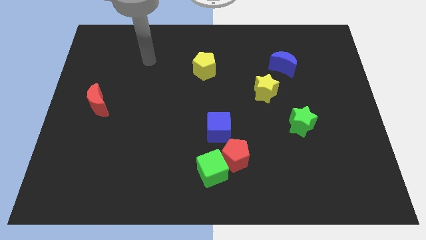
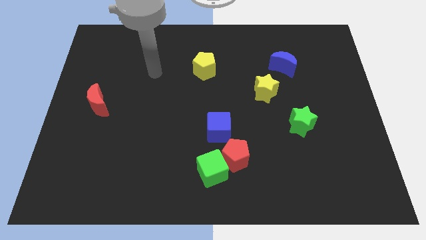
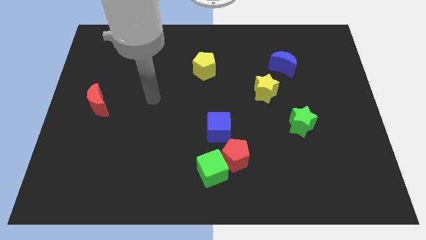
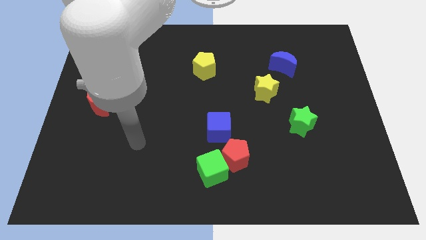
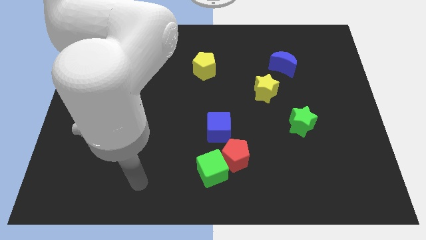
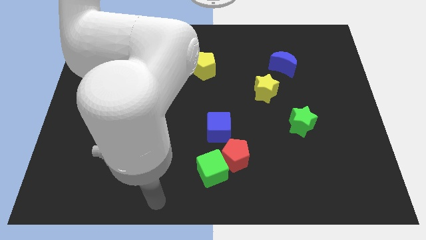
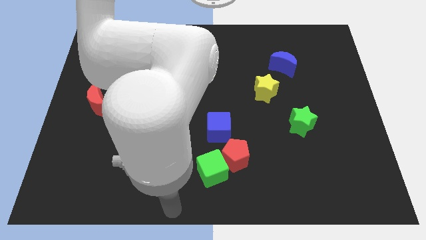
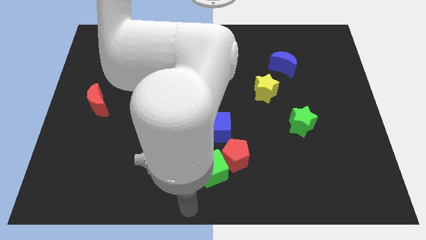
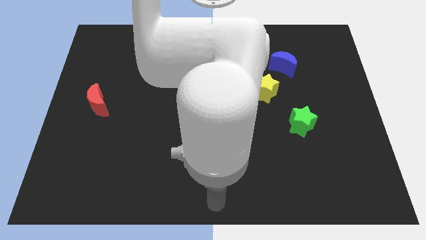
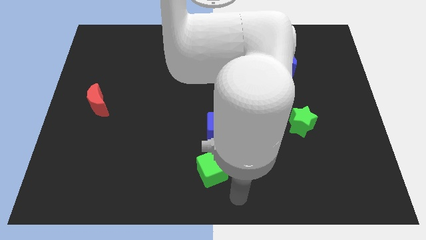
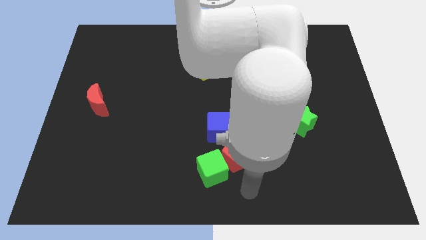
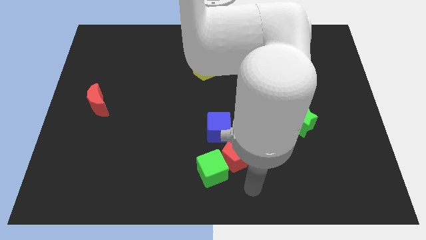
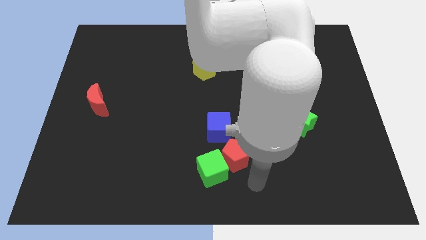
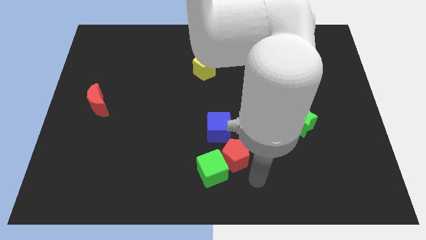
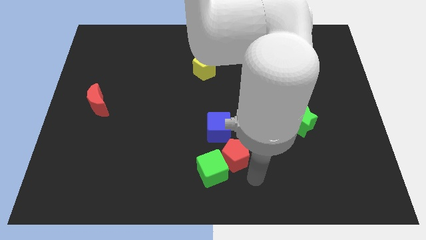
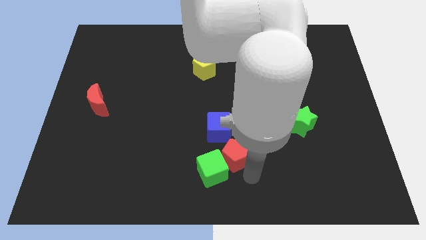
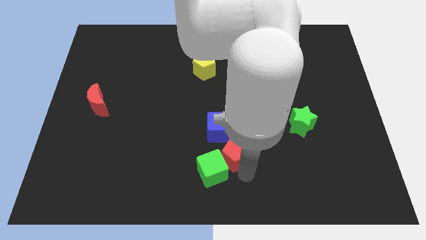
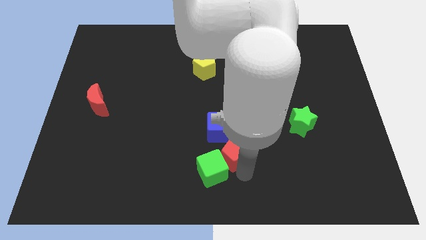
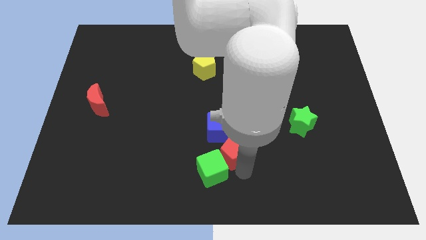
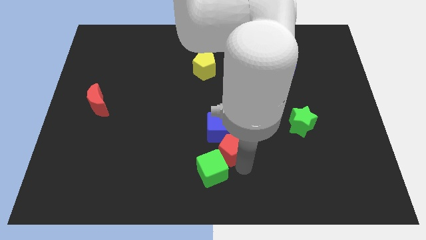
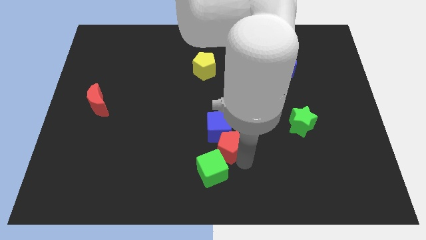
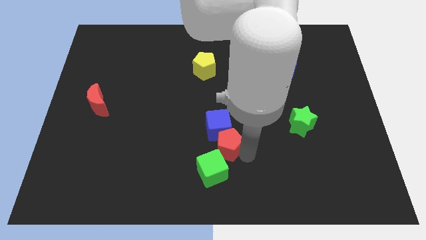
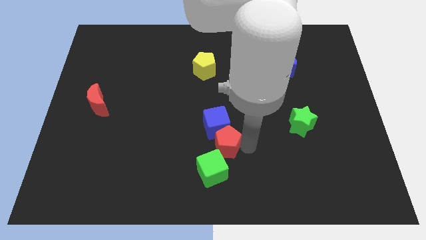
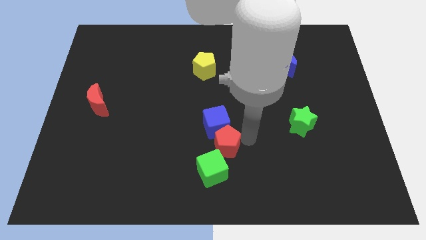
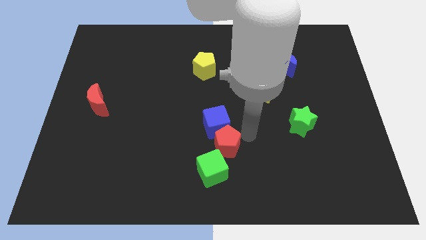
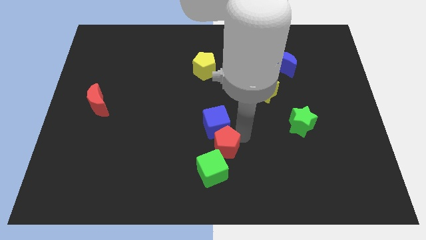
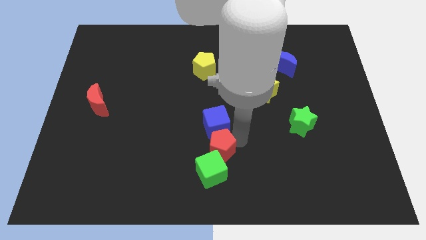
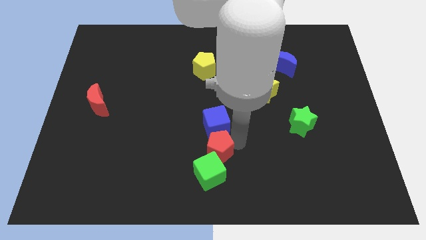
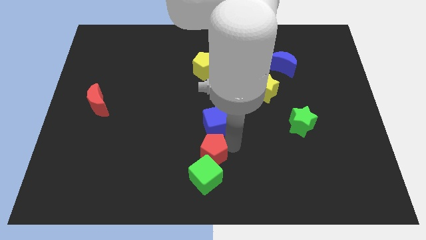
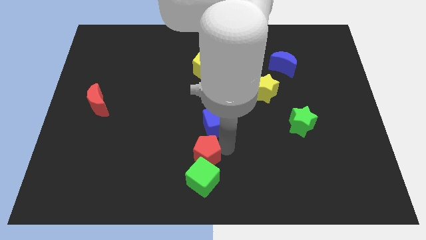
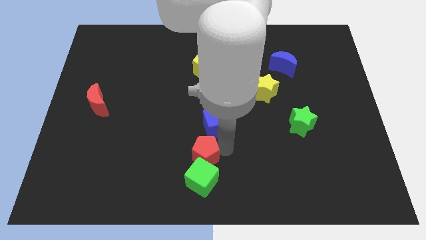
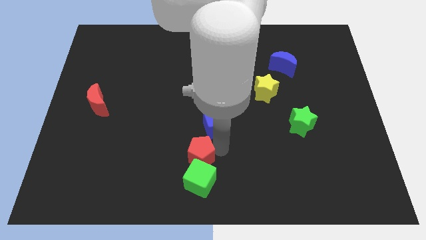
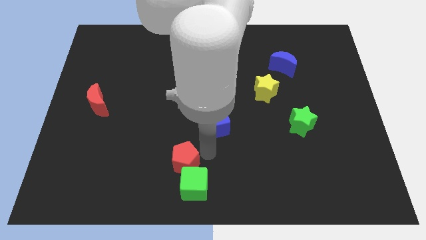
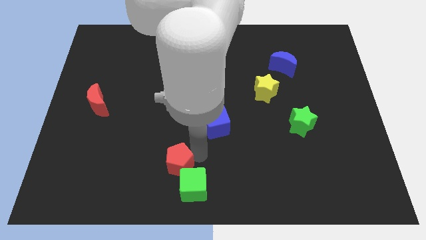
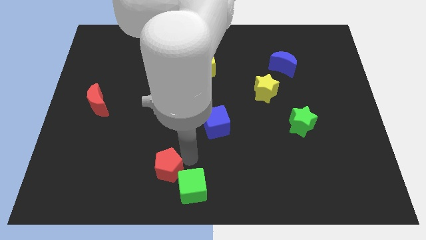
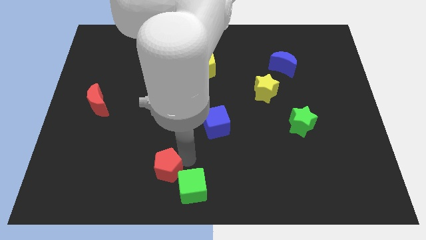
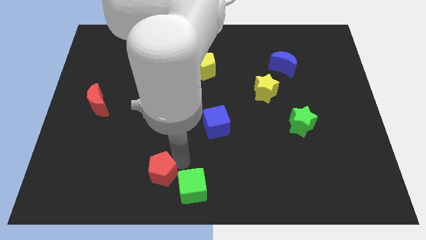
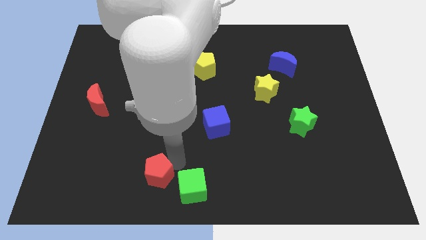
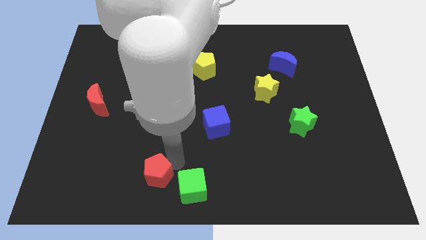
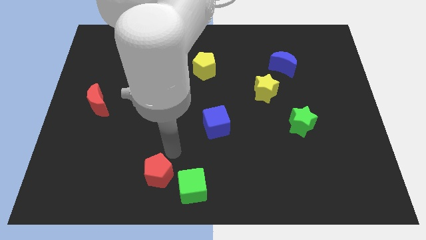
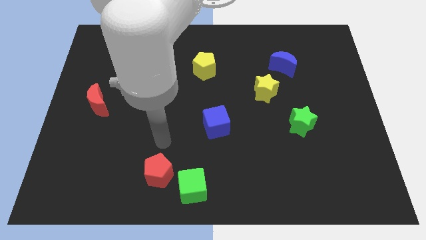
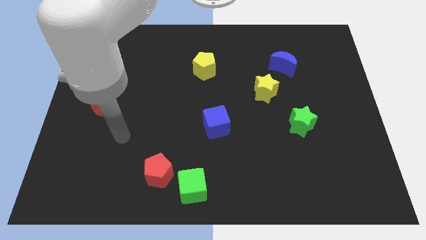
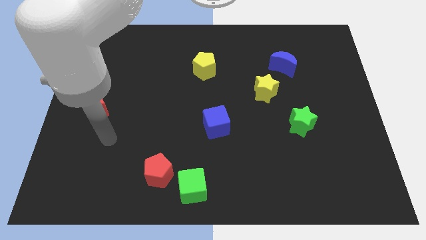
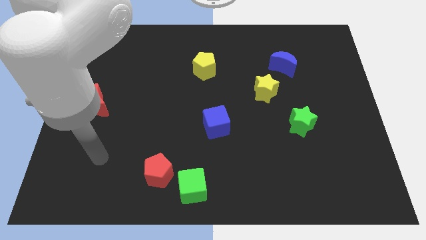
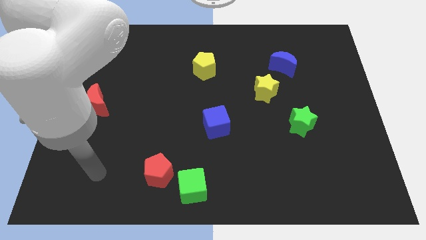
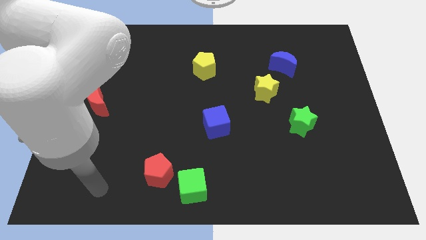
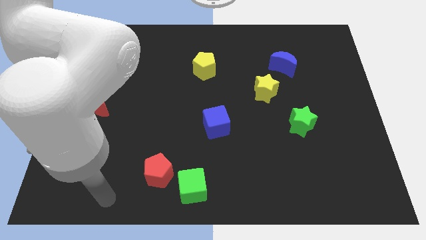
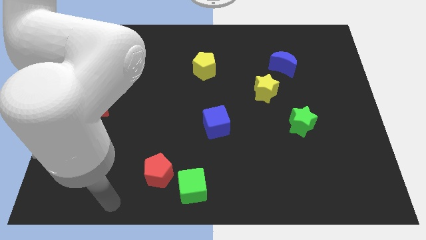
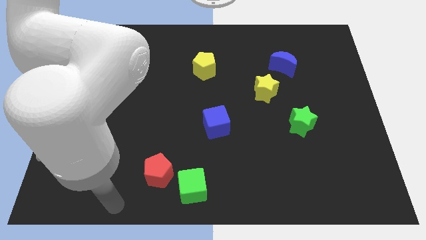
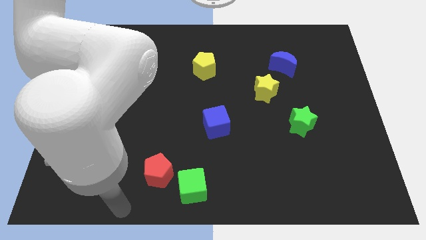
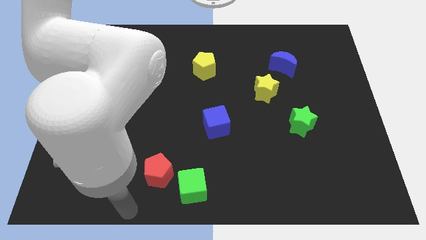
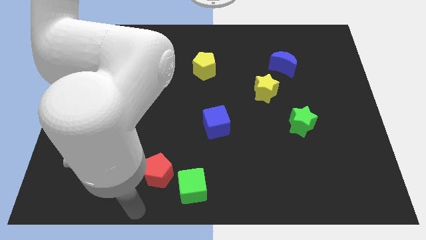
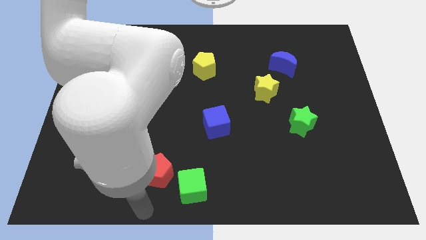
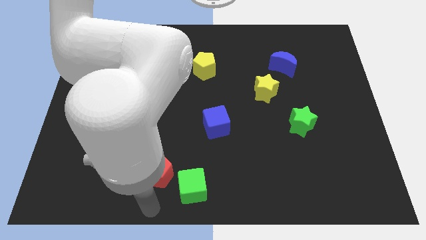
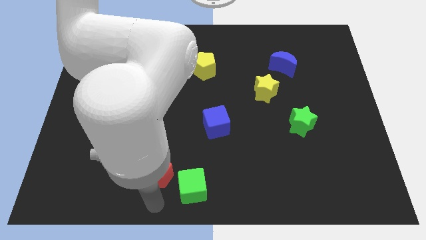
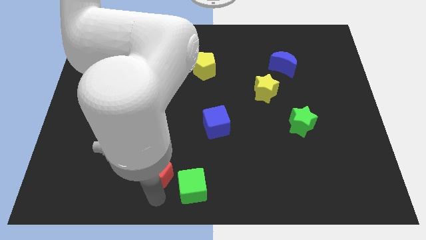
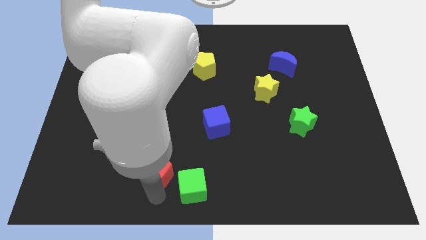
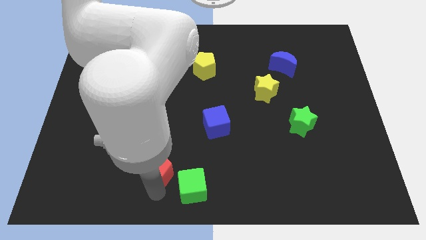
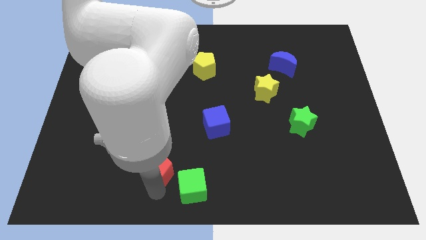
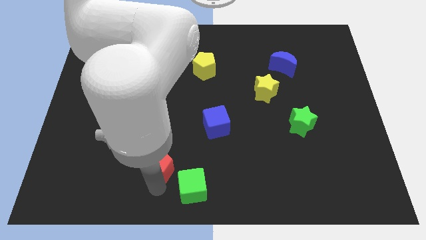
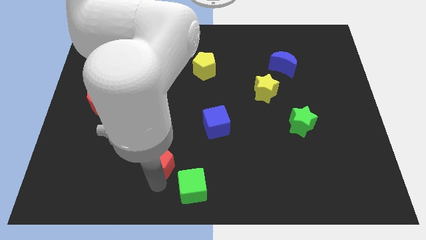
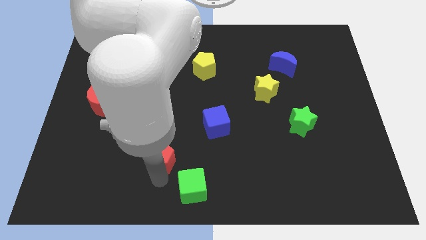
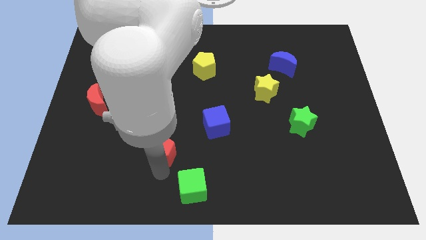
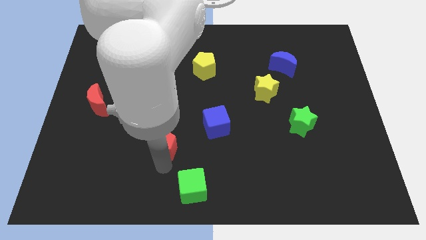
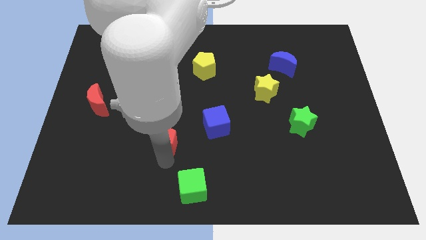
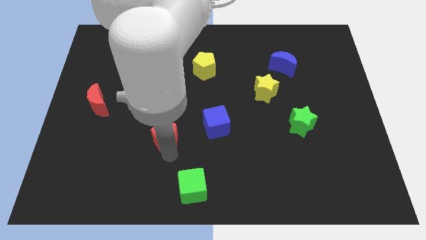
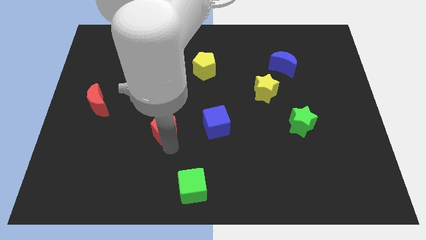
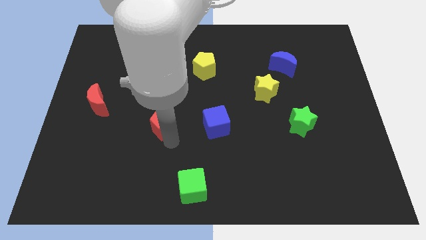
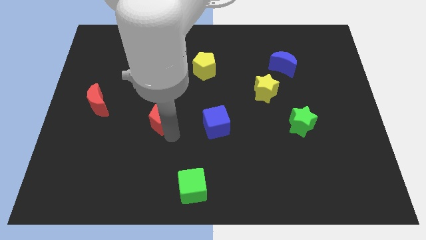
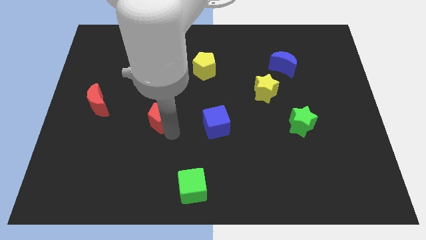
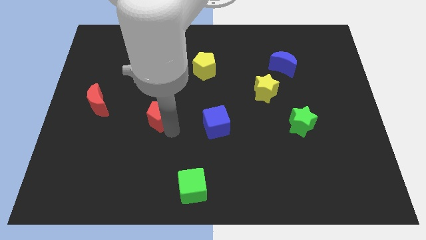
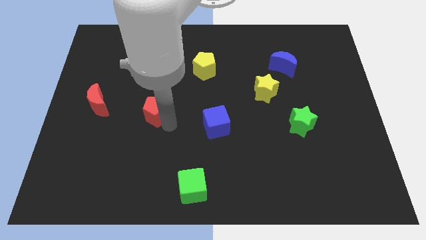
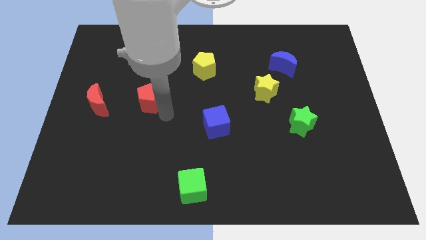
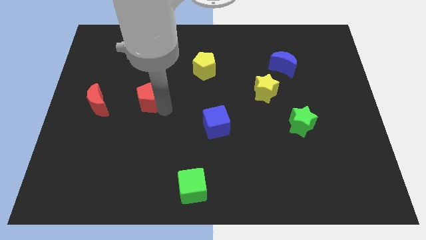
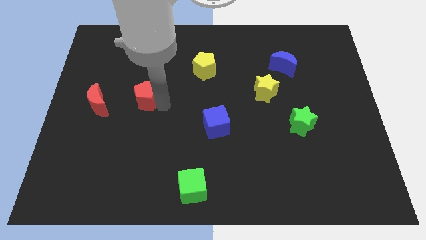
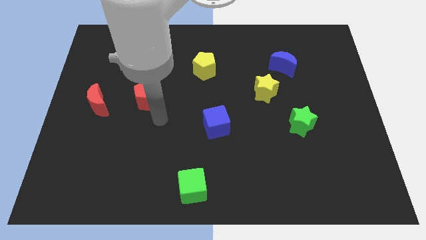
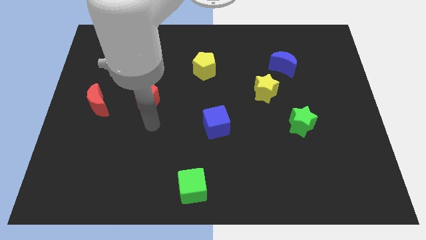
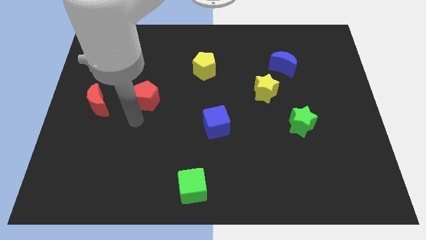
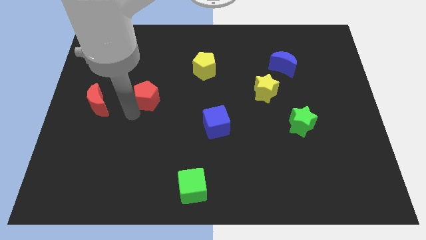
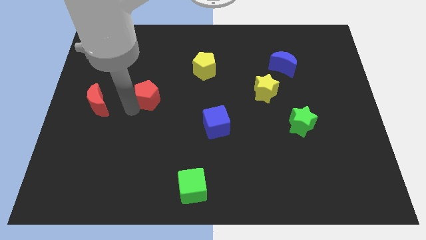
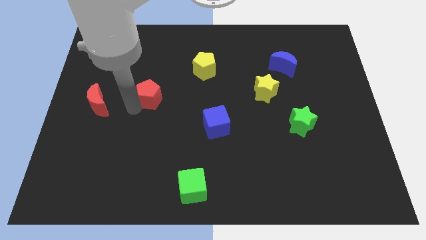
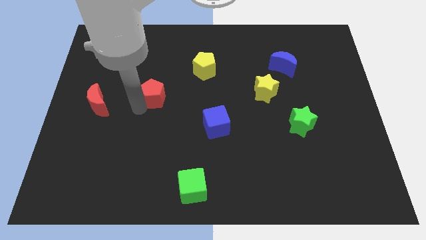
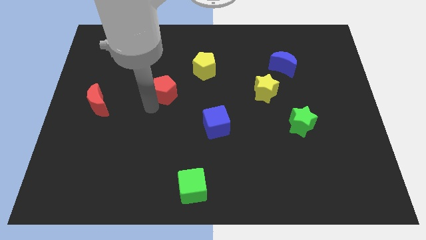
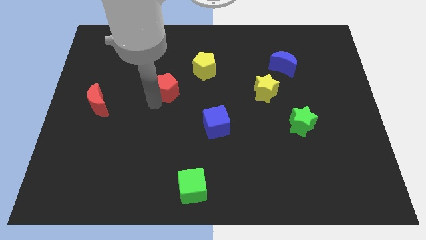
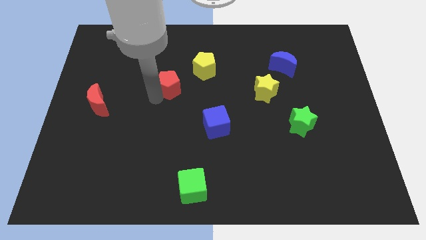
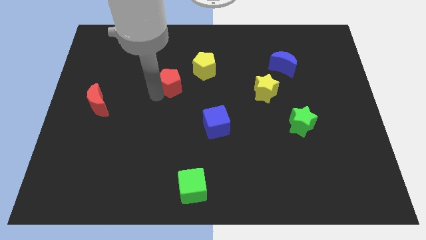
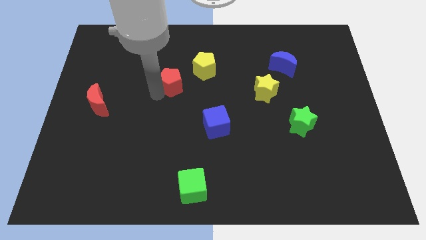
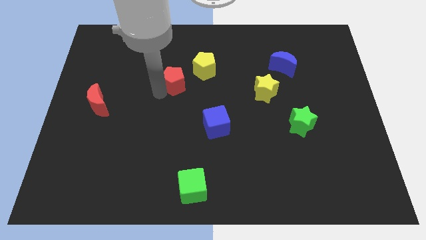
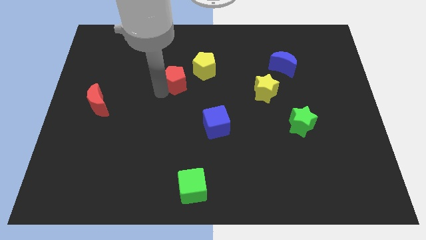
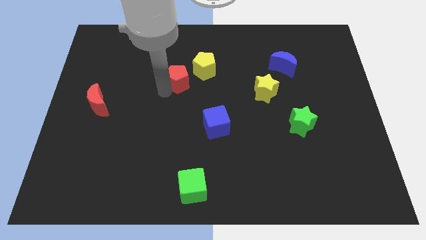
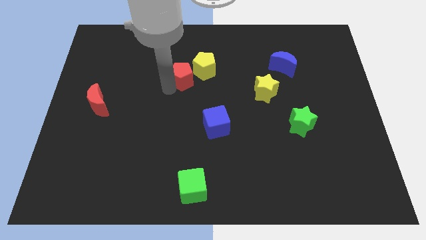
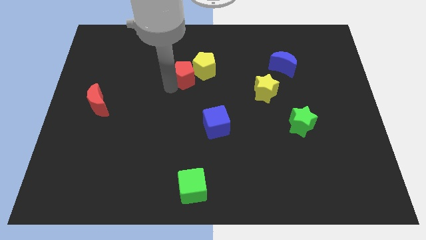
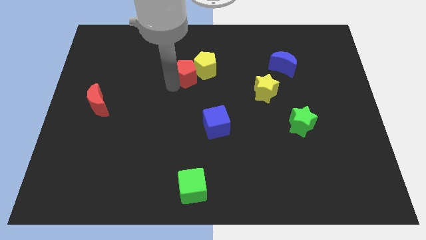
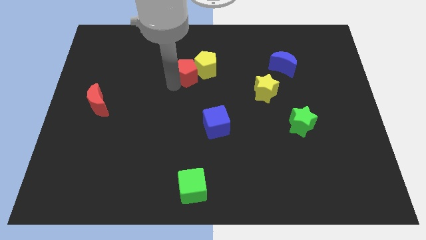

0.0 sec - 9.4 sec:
push the red pentagon close to the yellow pentagon
